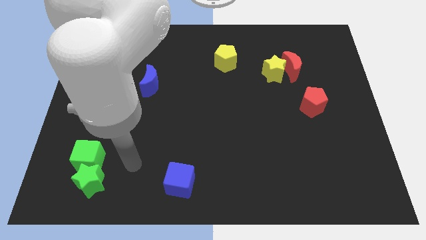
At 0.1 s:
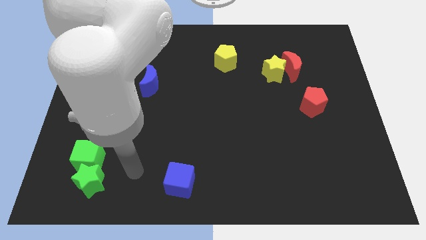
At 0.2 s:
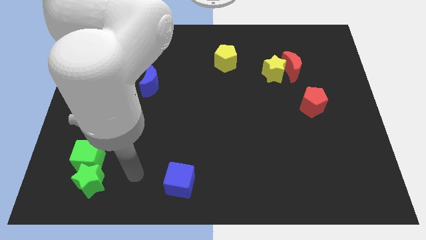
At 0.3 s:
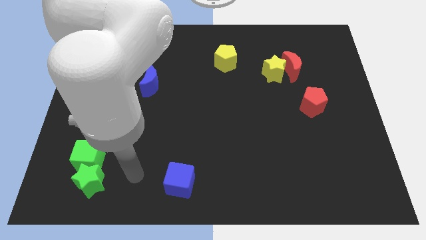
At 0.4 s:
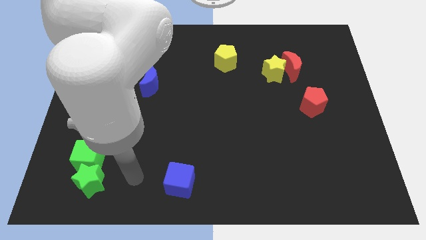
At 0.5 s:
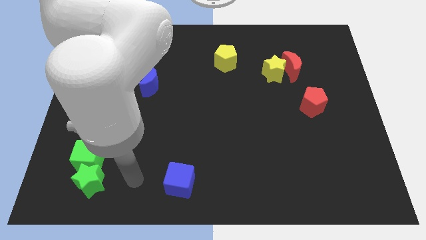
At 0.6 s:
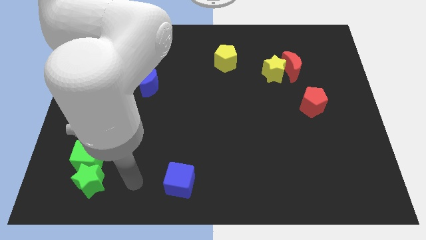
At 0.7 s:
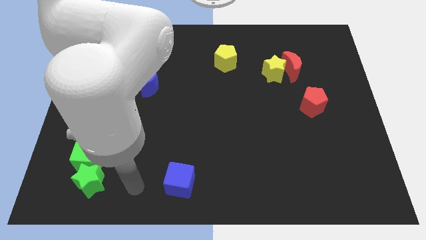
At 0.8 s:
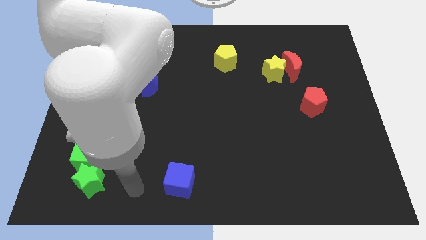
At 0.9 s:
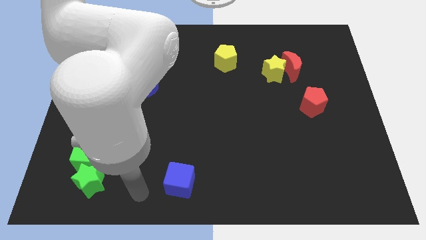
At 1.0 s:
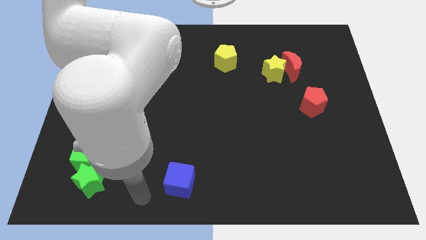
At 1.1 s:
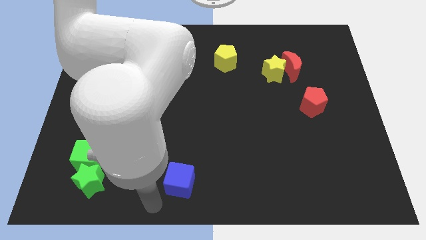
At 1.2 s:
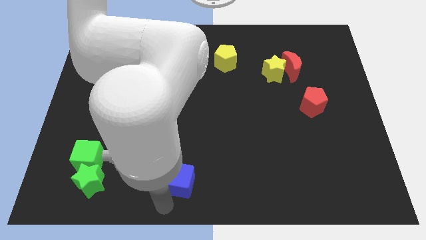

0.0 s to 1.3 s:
place your arm at the bottom of blue cube

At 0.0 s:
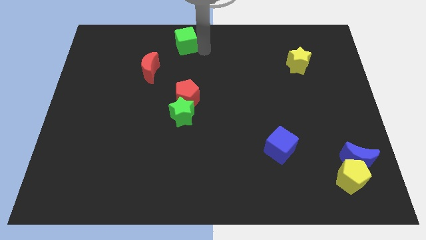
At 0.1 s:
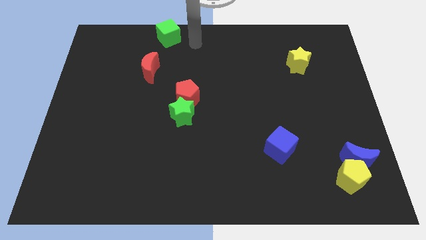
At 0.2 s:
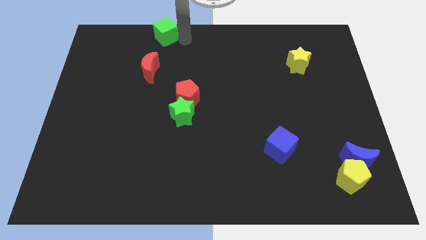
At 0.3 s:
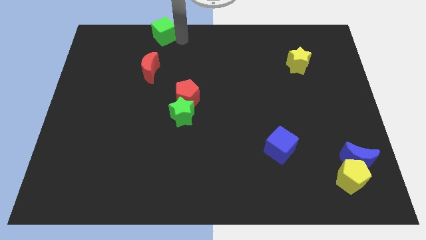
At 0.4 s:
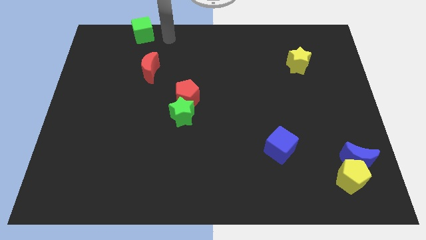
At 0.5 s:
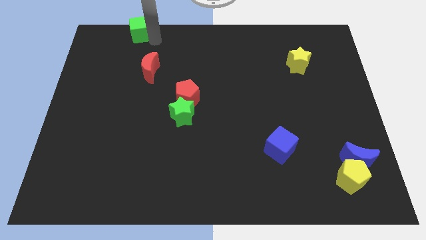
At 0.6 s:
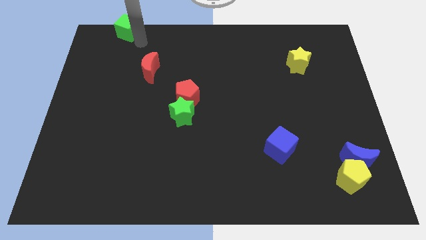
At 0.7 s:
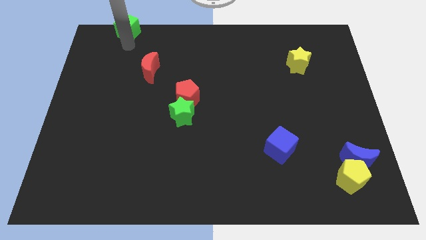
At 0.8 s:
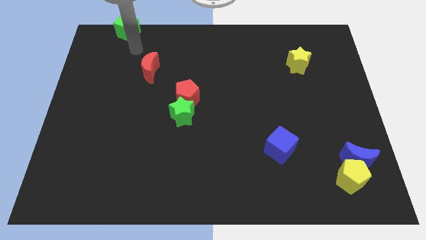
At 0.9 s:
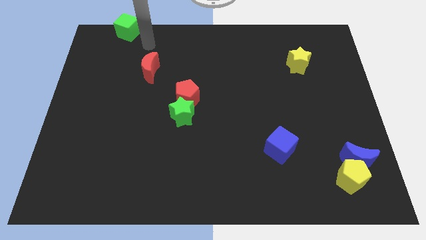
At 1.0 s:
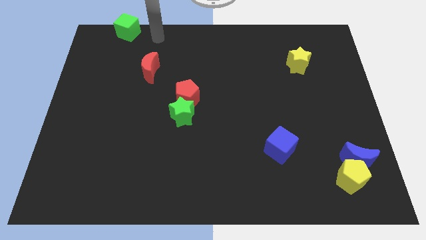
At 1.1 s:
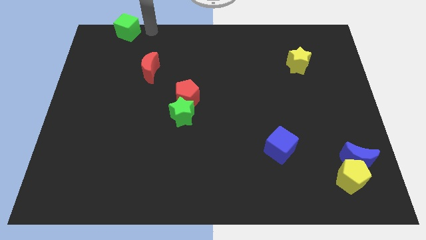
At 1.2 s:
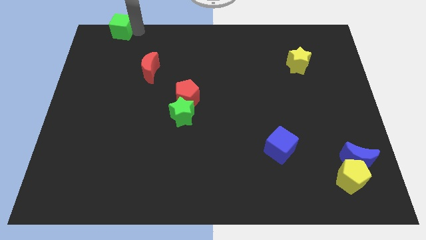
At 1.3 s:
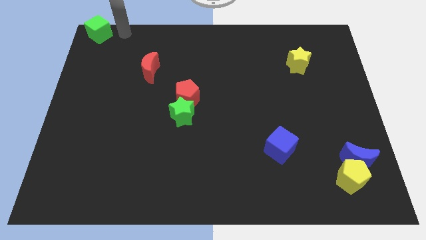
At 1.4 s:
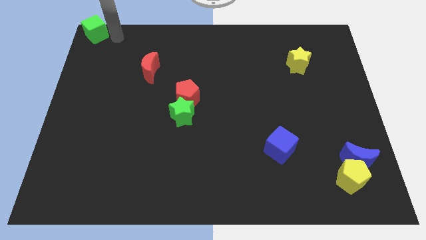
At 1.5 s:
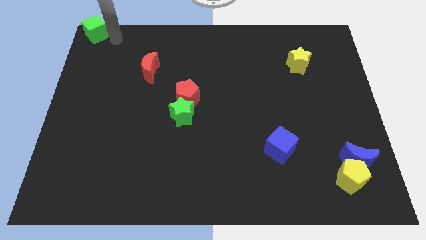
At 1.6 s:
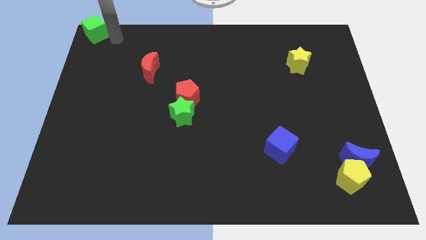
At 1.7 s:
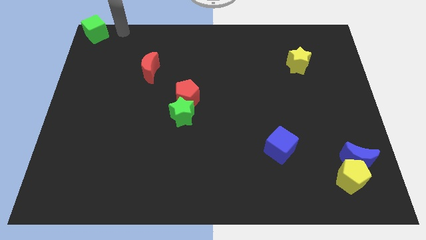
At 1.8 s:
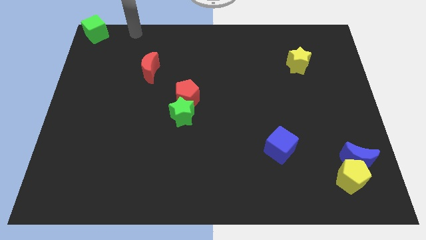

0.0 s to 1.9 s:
push the green cube to the top left corner of the board

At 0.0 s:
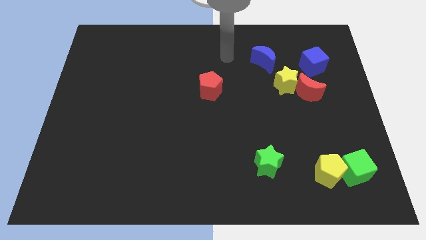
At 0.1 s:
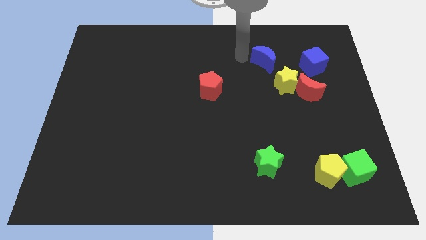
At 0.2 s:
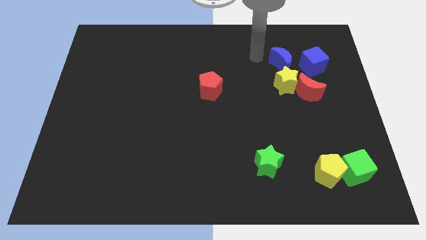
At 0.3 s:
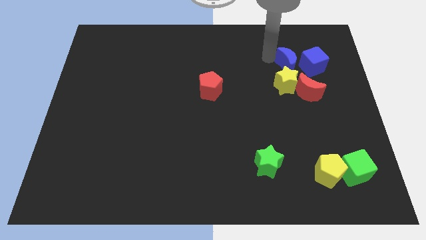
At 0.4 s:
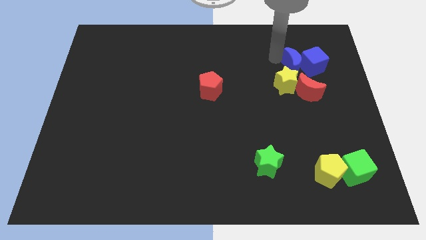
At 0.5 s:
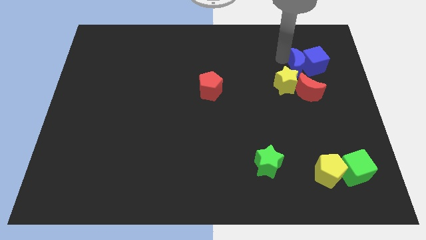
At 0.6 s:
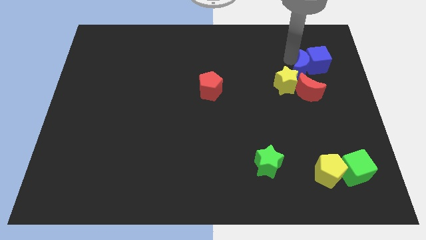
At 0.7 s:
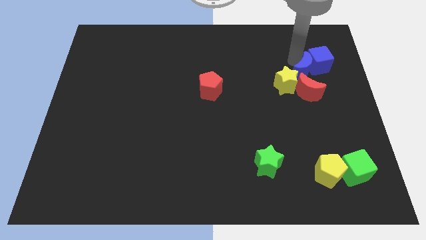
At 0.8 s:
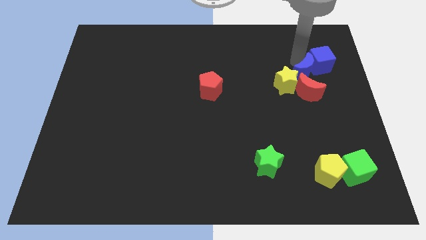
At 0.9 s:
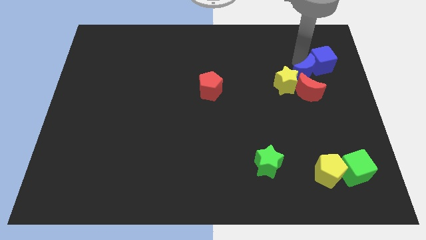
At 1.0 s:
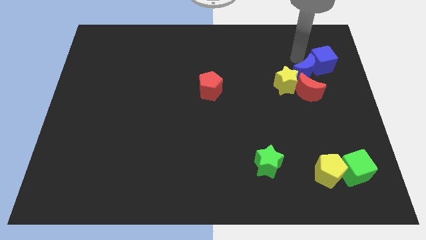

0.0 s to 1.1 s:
push blue crescent into blue cube

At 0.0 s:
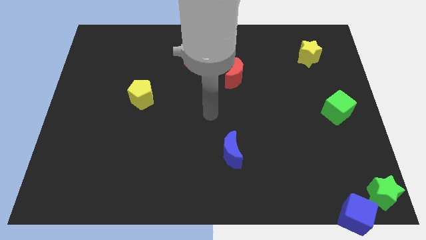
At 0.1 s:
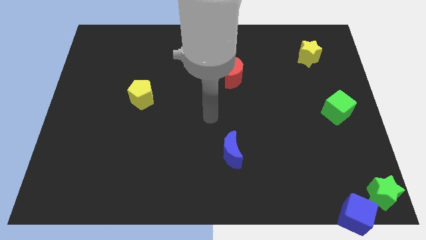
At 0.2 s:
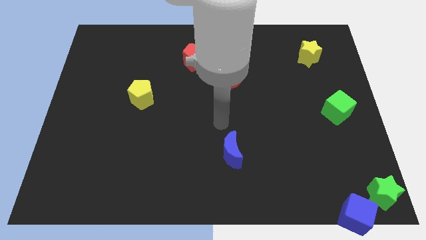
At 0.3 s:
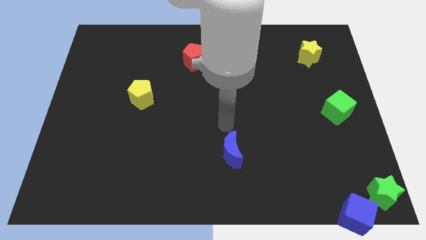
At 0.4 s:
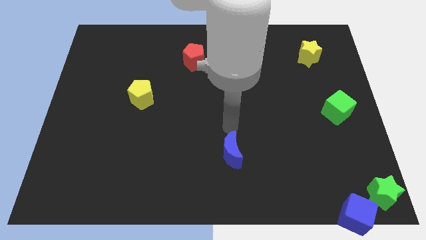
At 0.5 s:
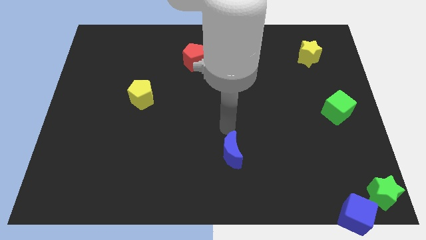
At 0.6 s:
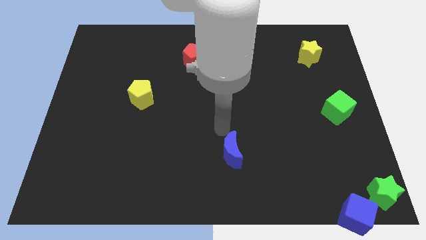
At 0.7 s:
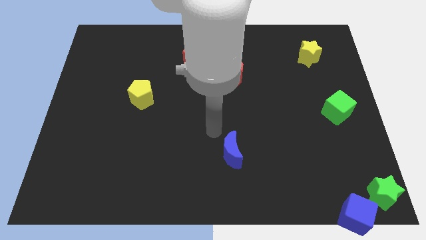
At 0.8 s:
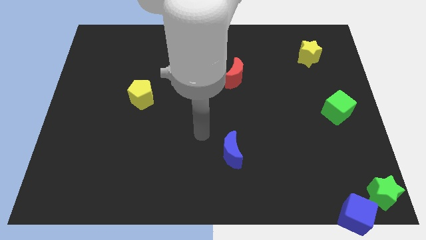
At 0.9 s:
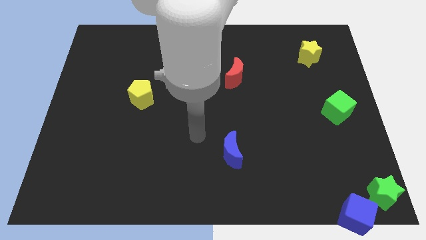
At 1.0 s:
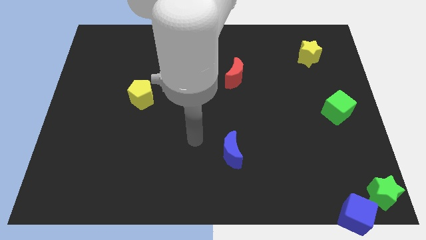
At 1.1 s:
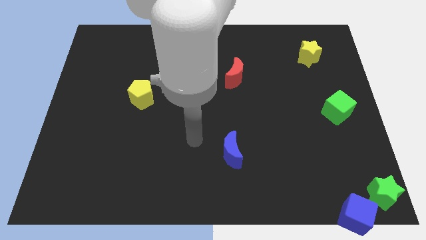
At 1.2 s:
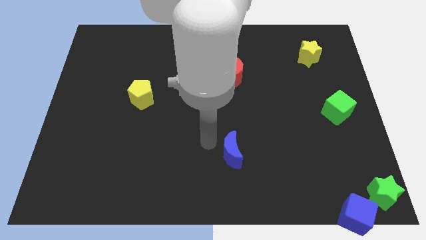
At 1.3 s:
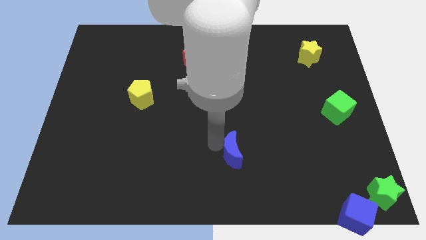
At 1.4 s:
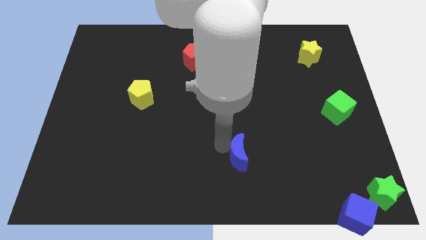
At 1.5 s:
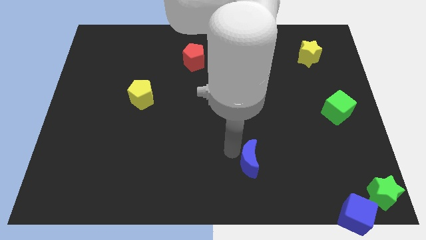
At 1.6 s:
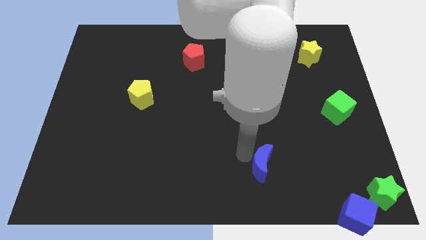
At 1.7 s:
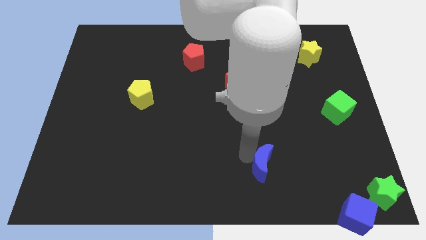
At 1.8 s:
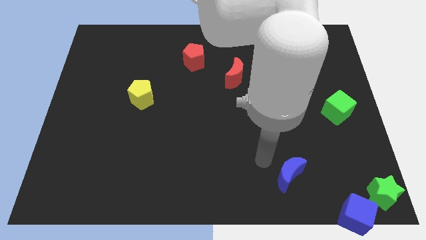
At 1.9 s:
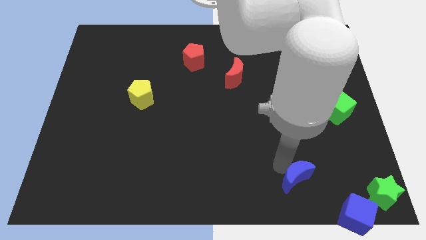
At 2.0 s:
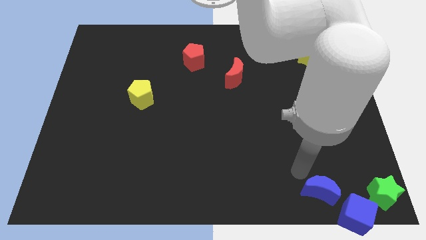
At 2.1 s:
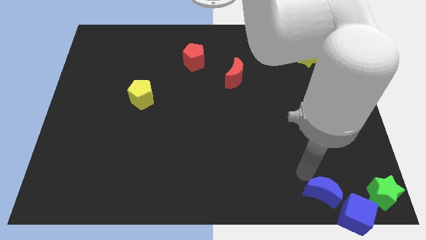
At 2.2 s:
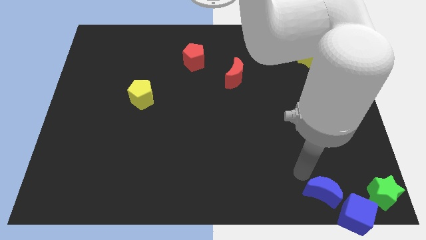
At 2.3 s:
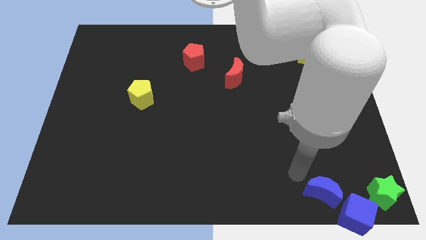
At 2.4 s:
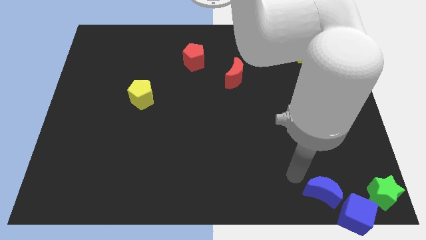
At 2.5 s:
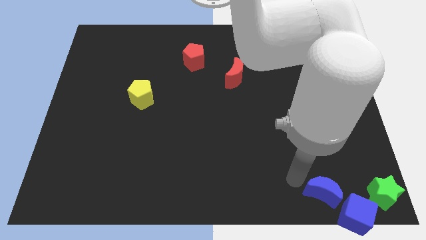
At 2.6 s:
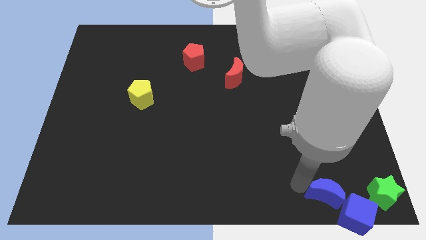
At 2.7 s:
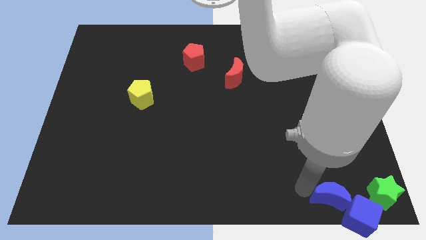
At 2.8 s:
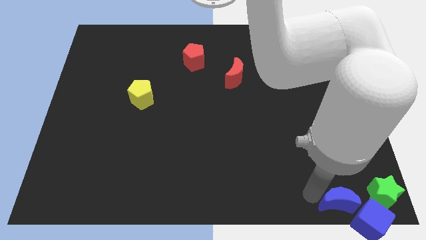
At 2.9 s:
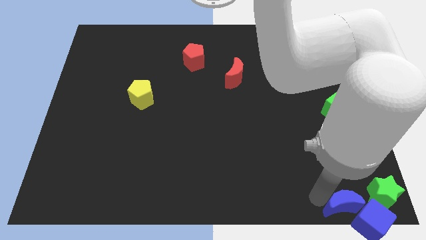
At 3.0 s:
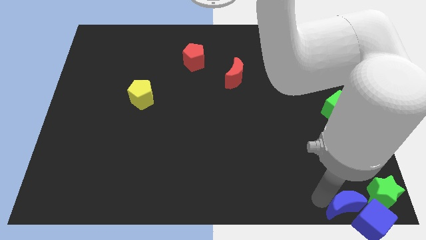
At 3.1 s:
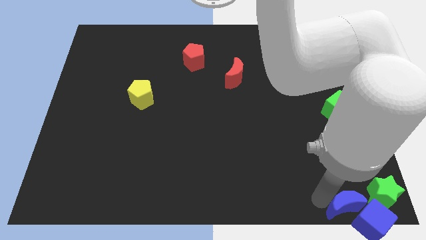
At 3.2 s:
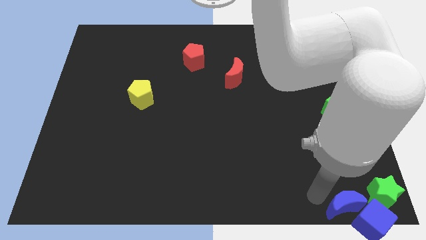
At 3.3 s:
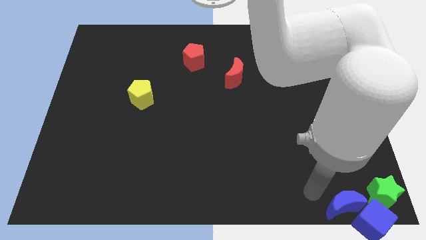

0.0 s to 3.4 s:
push the blue crescent into the blue cube

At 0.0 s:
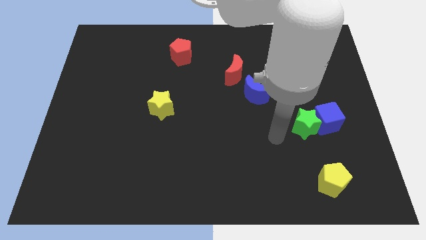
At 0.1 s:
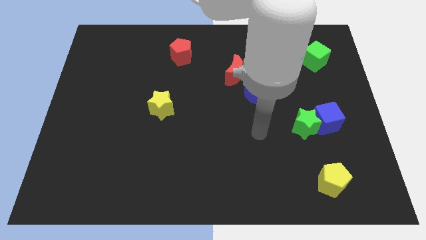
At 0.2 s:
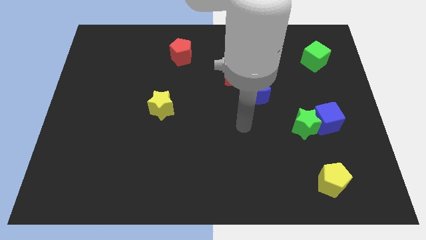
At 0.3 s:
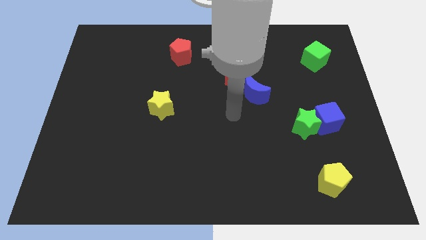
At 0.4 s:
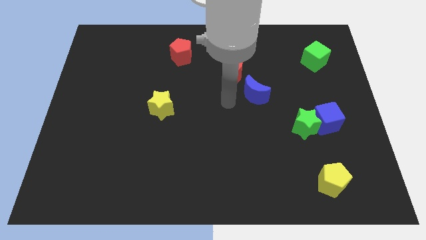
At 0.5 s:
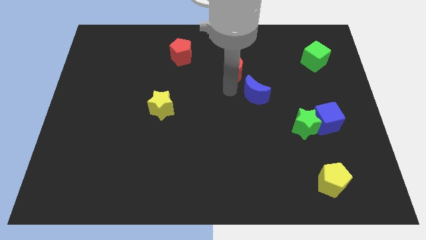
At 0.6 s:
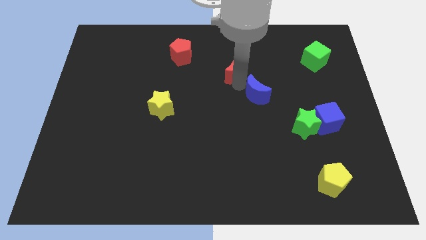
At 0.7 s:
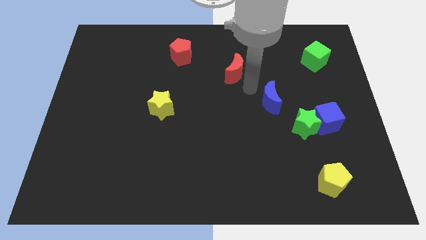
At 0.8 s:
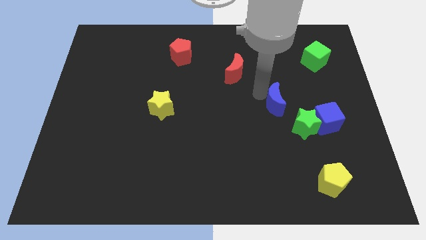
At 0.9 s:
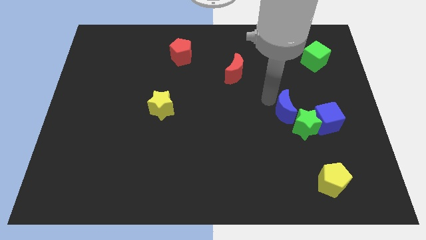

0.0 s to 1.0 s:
separate red moon and blue moon

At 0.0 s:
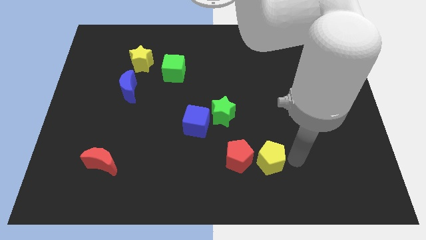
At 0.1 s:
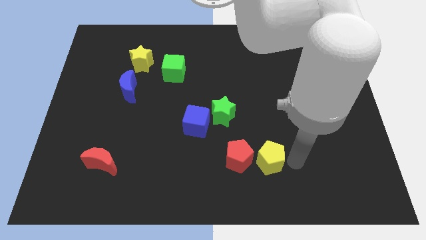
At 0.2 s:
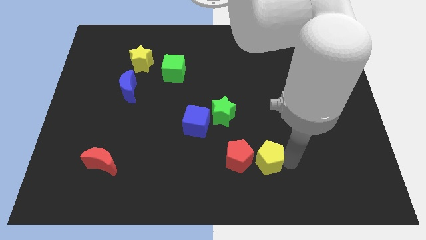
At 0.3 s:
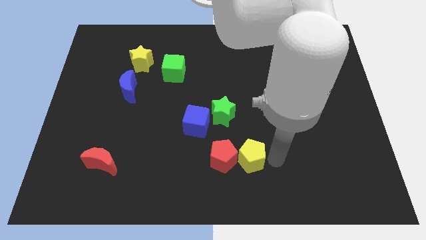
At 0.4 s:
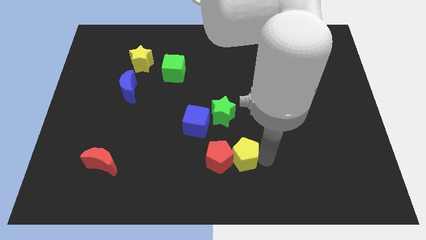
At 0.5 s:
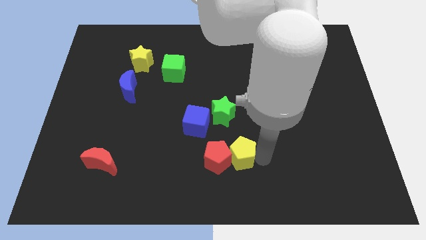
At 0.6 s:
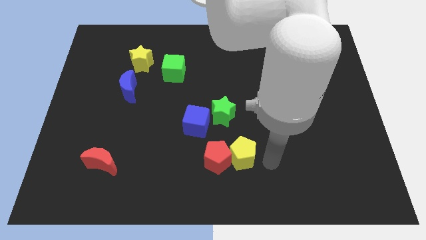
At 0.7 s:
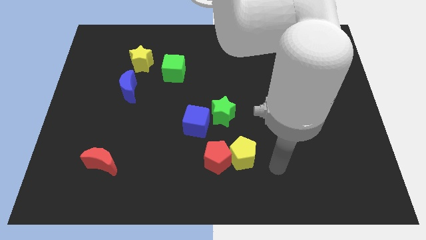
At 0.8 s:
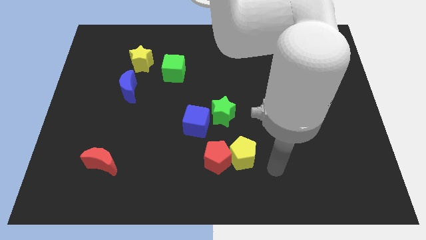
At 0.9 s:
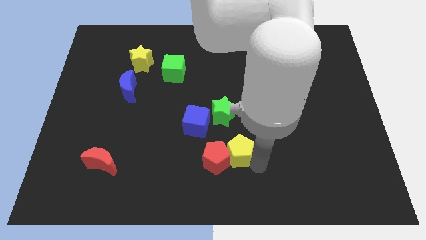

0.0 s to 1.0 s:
push the yellow pentagon into the red pentagon
